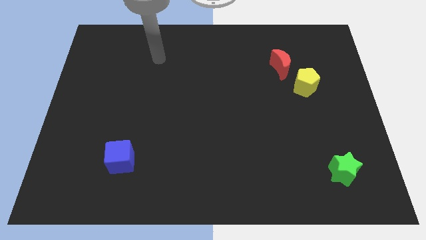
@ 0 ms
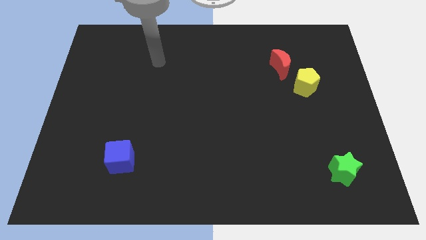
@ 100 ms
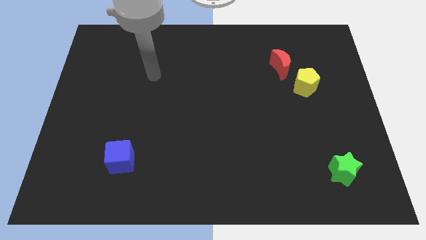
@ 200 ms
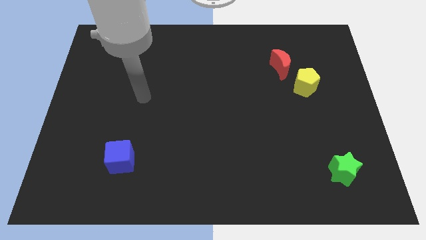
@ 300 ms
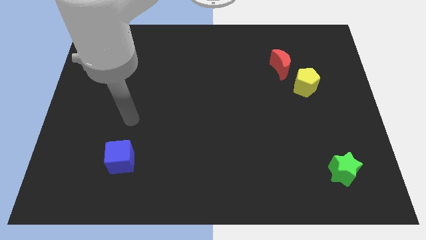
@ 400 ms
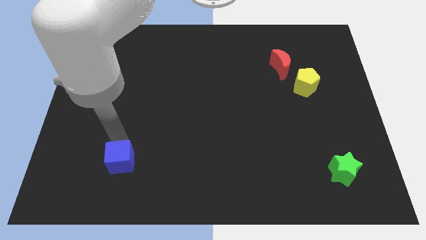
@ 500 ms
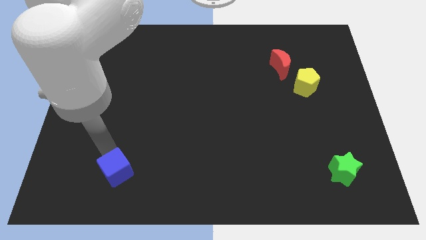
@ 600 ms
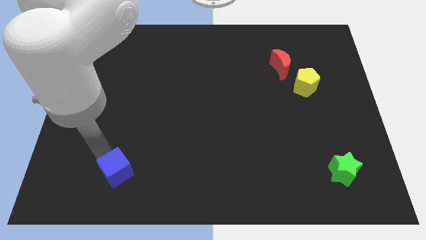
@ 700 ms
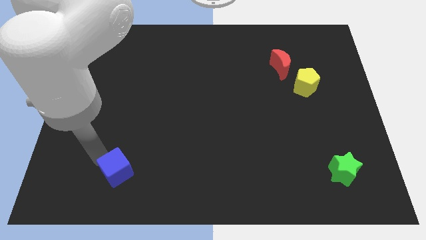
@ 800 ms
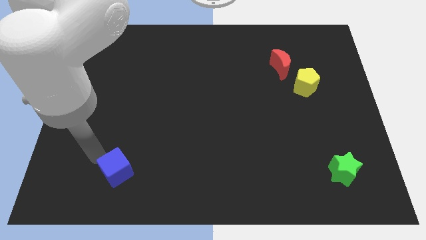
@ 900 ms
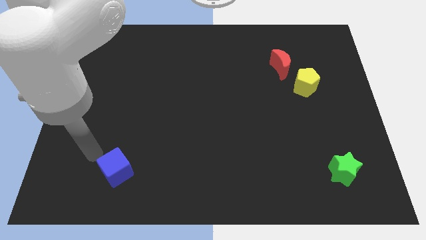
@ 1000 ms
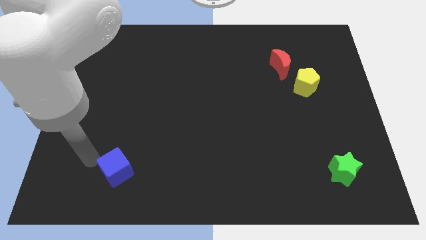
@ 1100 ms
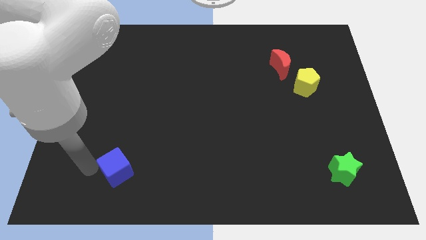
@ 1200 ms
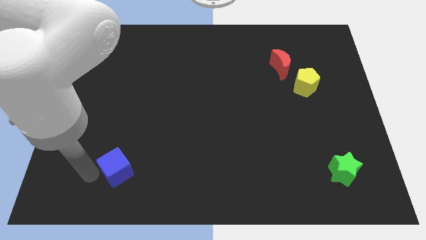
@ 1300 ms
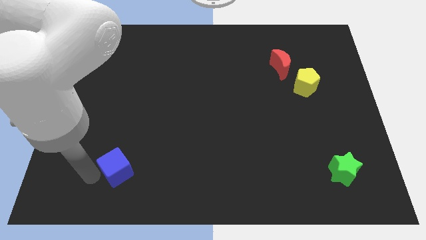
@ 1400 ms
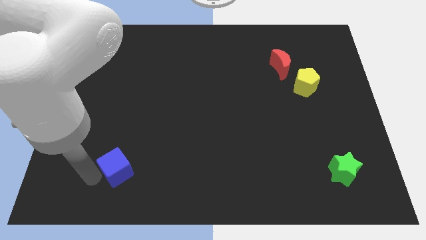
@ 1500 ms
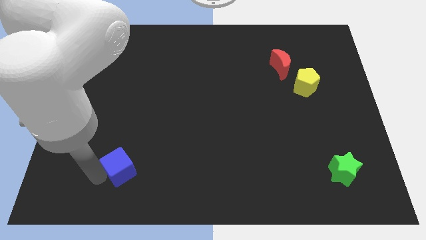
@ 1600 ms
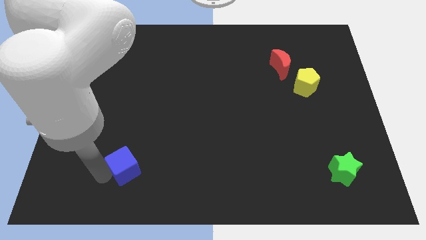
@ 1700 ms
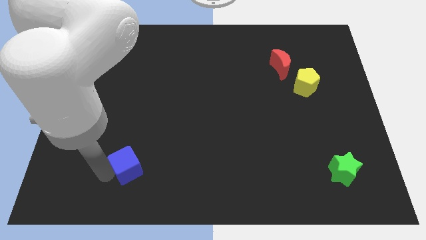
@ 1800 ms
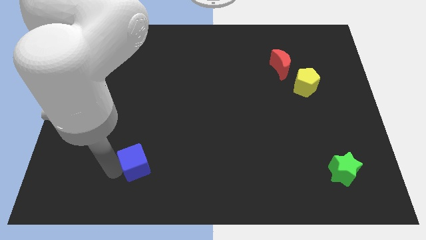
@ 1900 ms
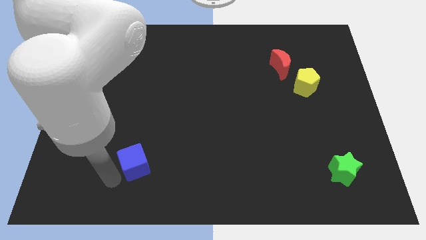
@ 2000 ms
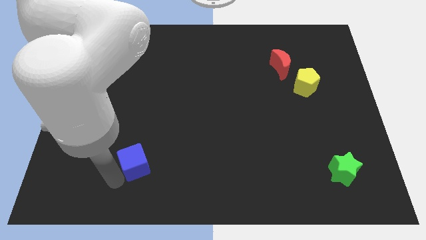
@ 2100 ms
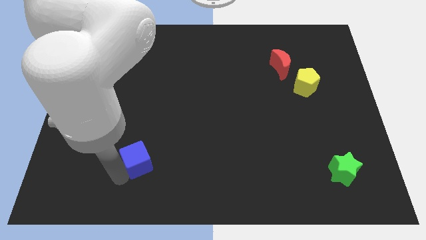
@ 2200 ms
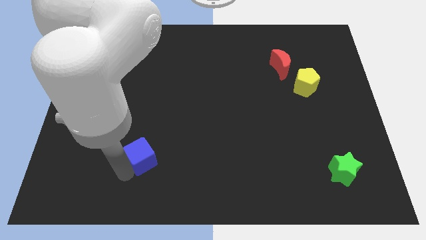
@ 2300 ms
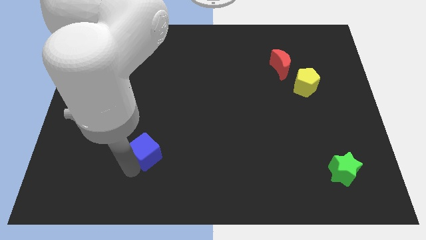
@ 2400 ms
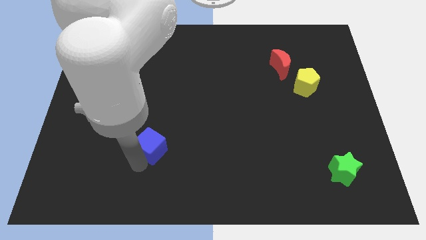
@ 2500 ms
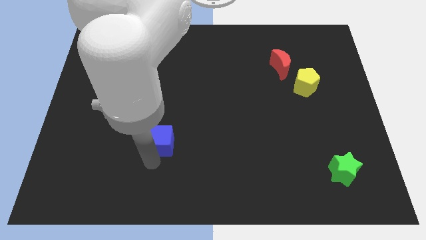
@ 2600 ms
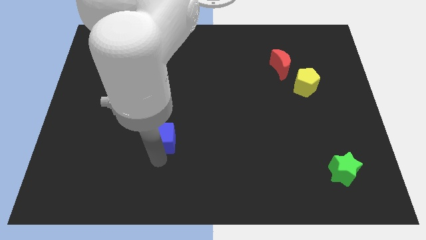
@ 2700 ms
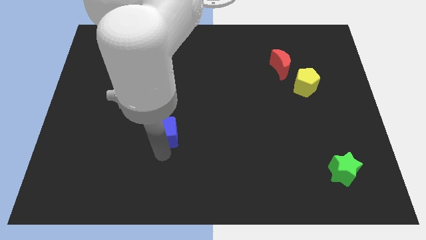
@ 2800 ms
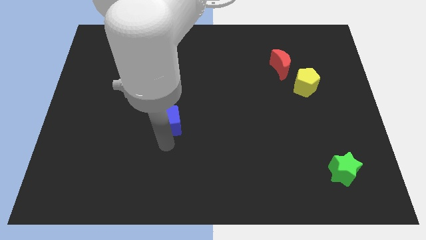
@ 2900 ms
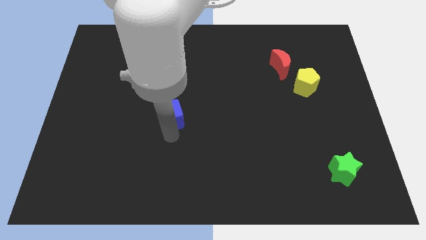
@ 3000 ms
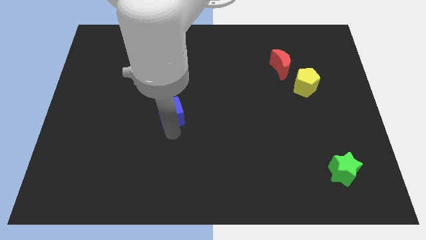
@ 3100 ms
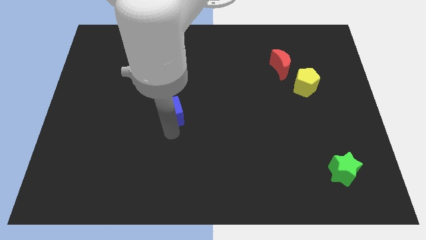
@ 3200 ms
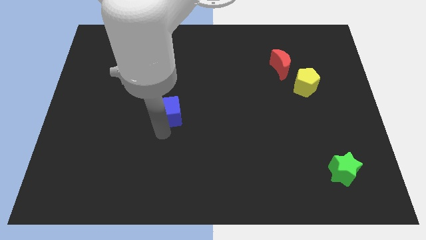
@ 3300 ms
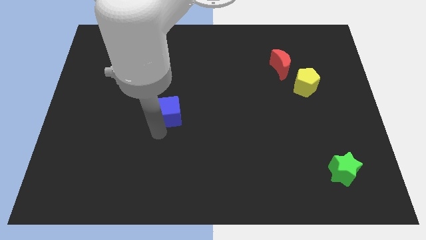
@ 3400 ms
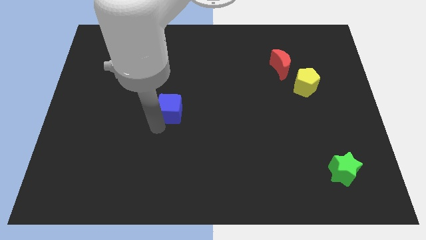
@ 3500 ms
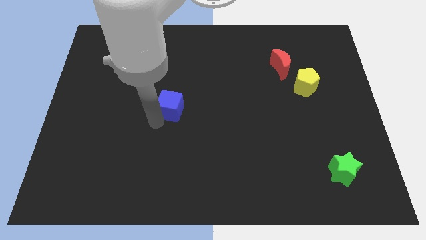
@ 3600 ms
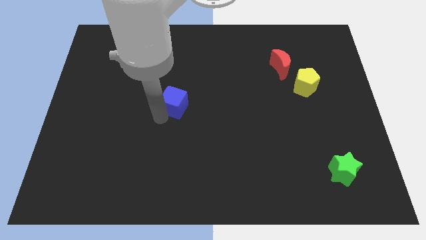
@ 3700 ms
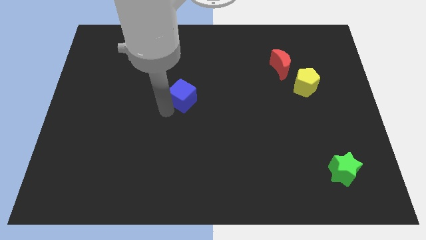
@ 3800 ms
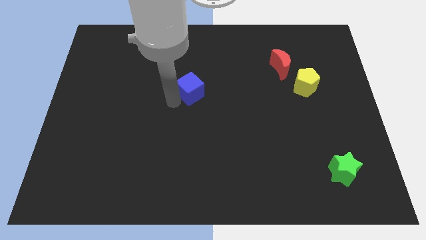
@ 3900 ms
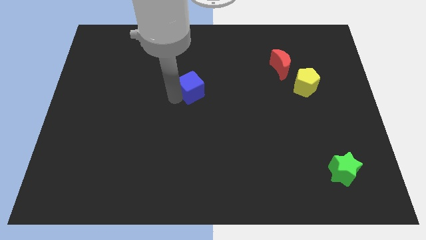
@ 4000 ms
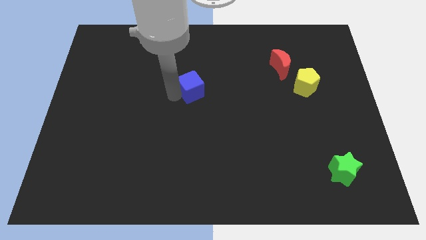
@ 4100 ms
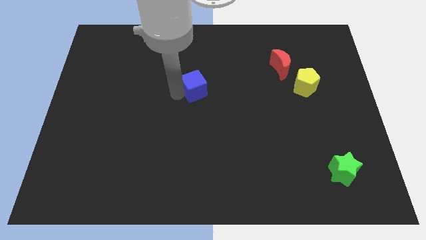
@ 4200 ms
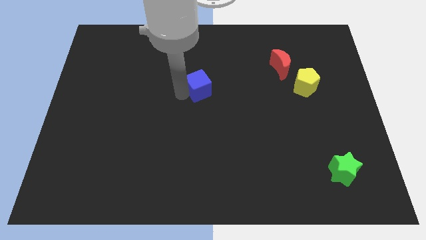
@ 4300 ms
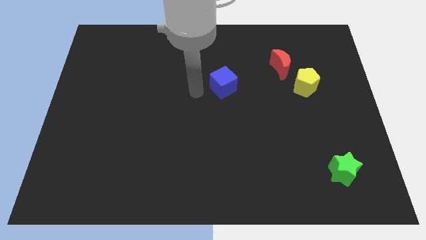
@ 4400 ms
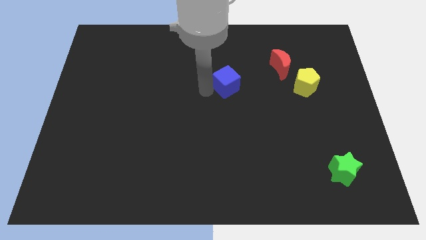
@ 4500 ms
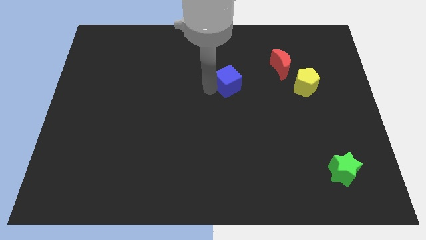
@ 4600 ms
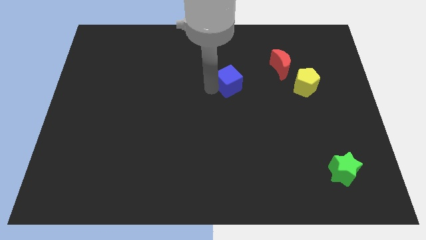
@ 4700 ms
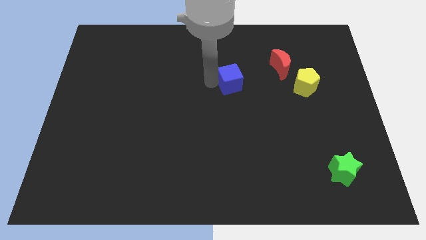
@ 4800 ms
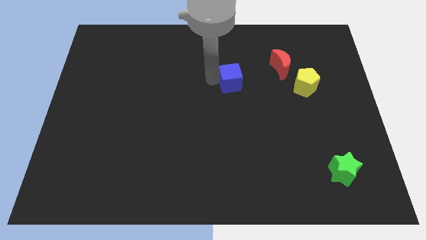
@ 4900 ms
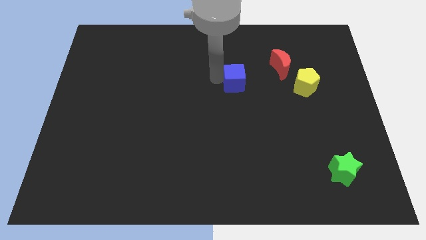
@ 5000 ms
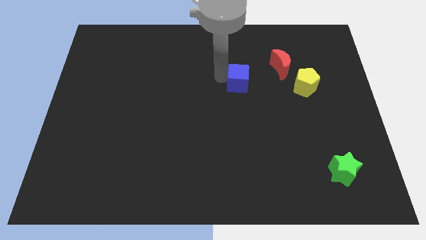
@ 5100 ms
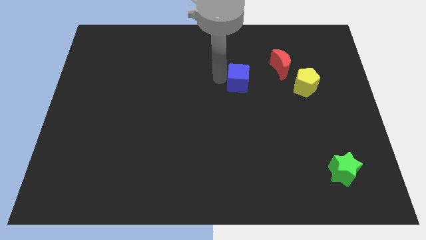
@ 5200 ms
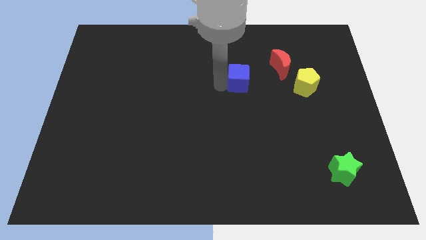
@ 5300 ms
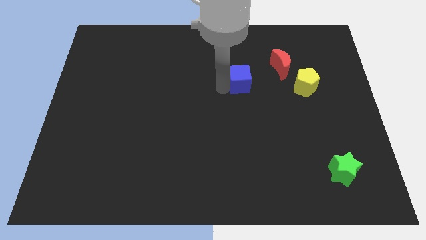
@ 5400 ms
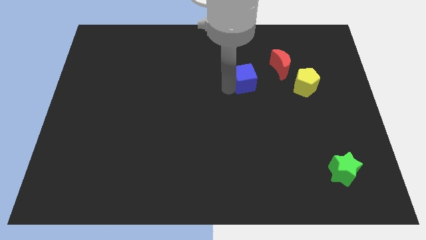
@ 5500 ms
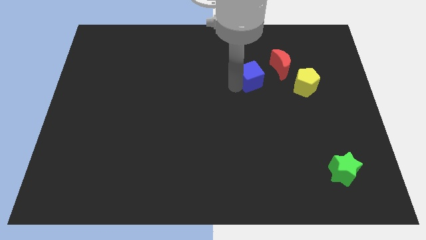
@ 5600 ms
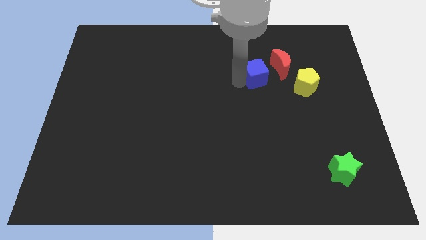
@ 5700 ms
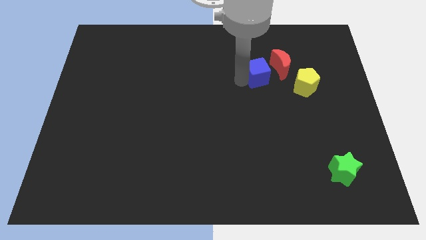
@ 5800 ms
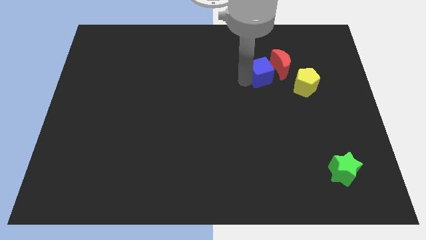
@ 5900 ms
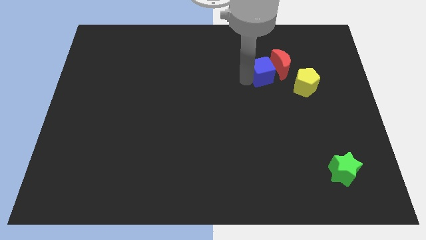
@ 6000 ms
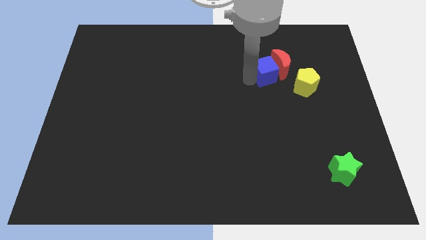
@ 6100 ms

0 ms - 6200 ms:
move the blue block next to the moon

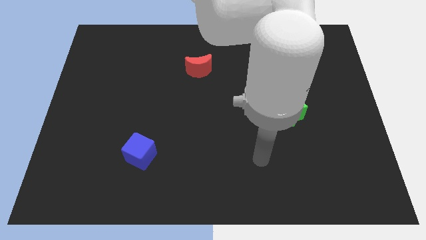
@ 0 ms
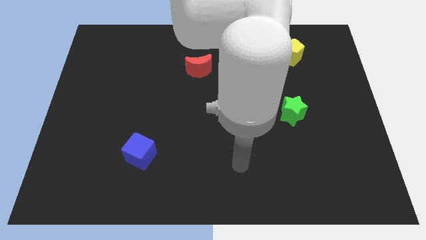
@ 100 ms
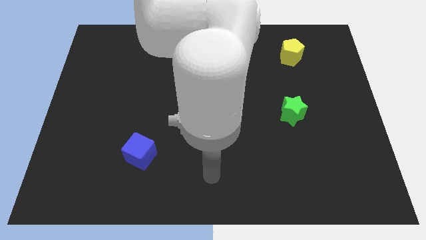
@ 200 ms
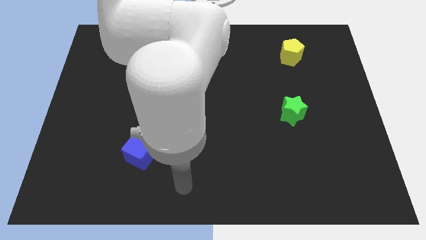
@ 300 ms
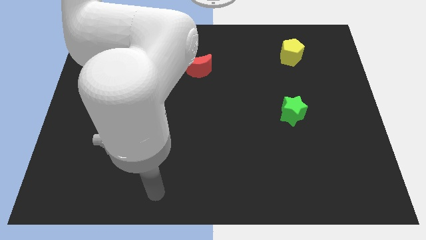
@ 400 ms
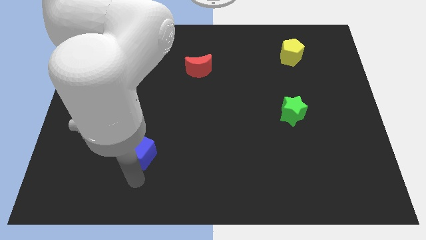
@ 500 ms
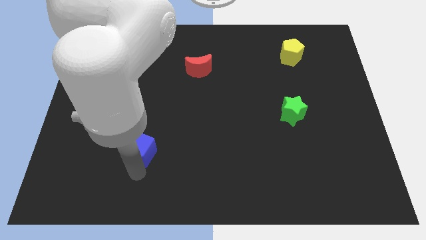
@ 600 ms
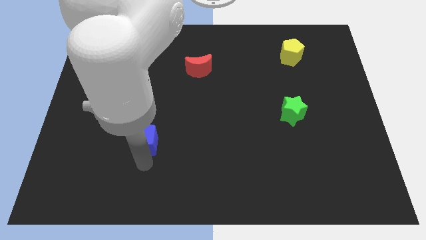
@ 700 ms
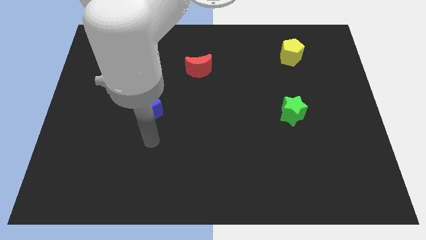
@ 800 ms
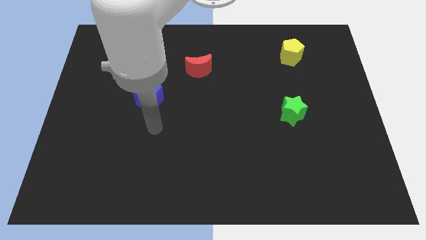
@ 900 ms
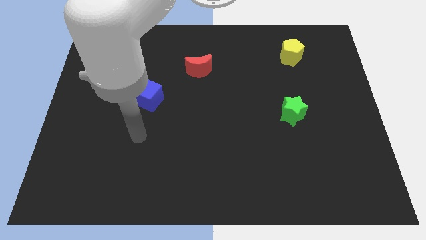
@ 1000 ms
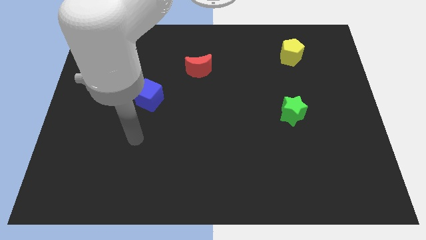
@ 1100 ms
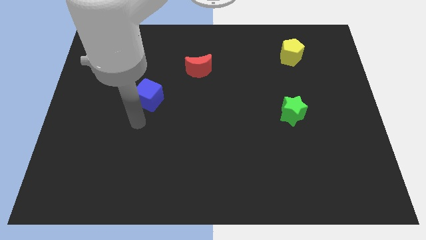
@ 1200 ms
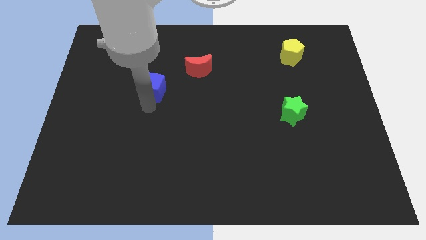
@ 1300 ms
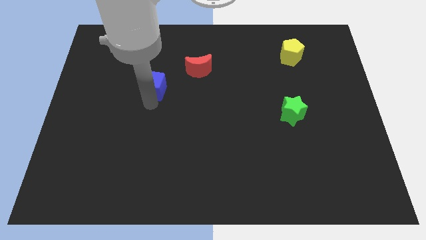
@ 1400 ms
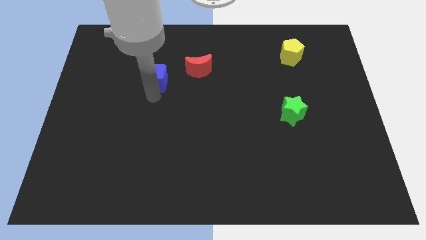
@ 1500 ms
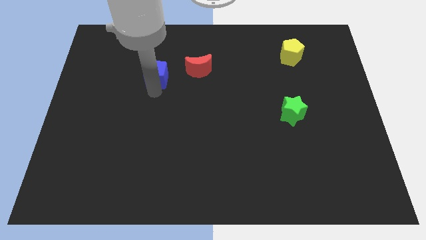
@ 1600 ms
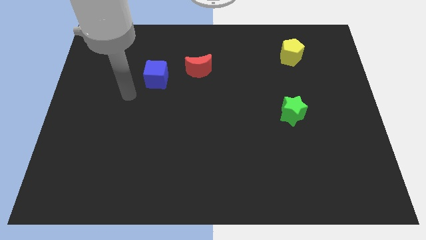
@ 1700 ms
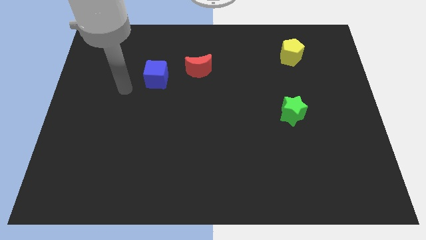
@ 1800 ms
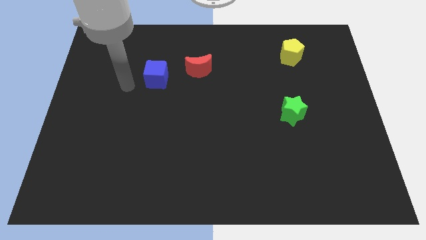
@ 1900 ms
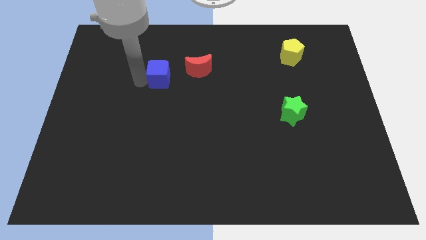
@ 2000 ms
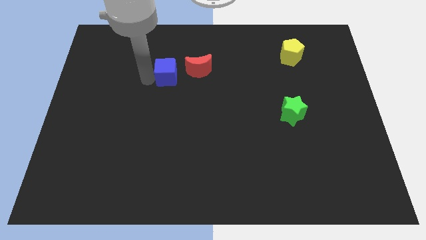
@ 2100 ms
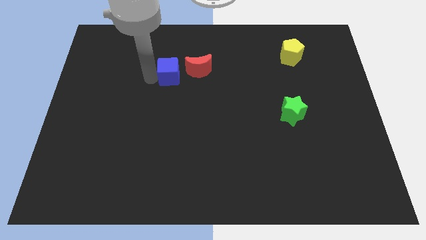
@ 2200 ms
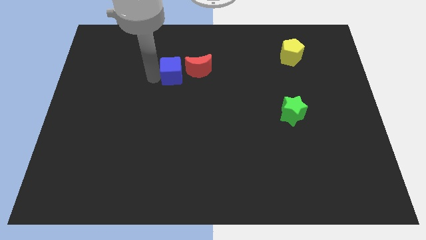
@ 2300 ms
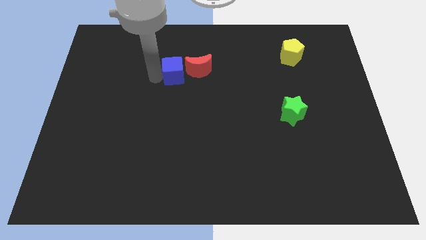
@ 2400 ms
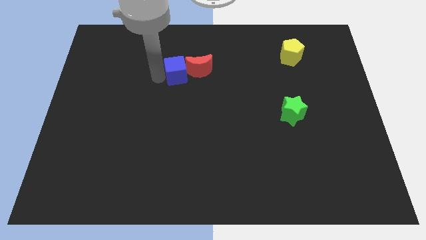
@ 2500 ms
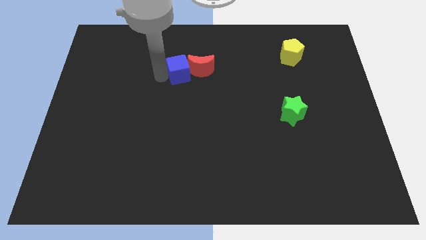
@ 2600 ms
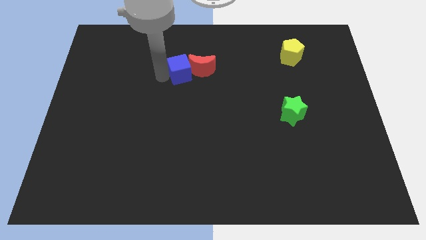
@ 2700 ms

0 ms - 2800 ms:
put the blue block close to the red moon
